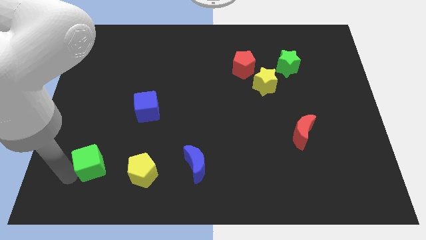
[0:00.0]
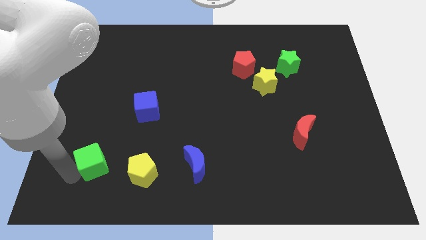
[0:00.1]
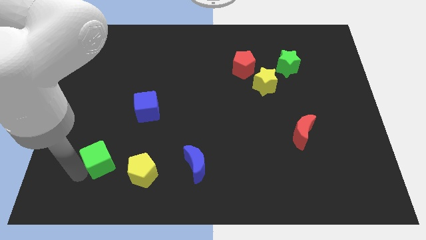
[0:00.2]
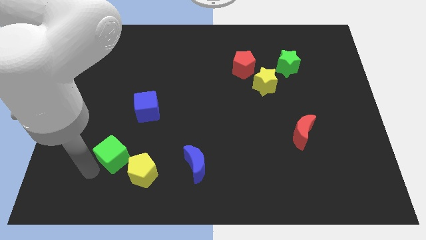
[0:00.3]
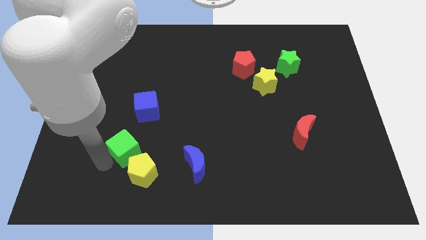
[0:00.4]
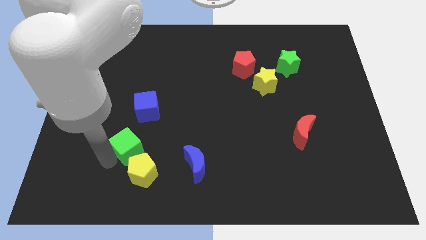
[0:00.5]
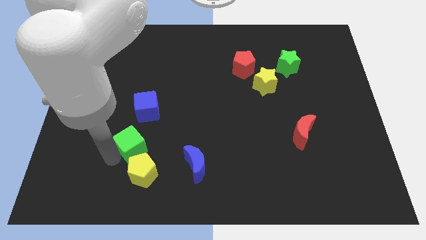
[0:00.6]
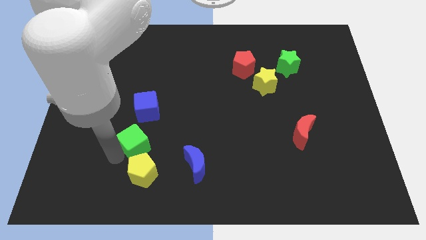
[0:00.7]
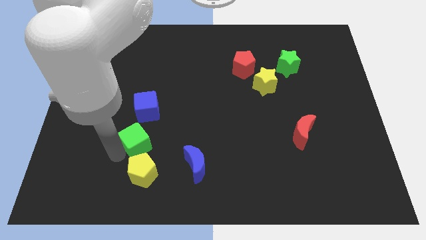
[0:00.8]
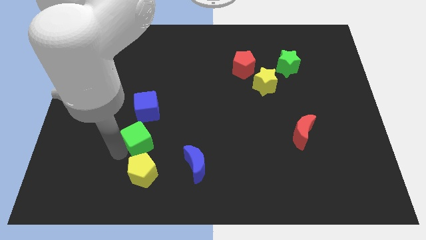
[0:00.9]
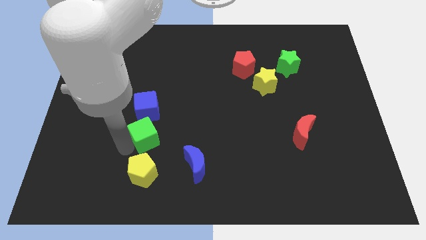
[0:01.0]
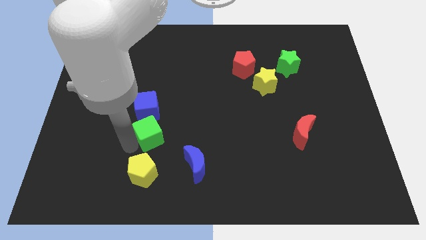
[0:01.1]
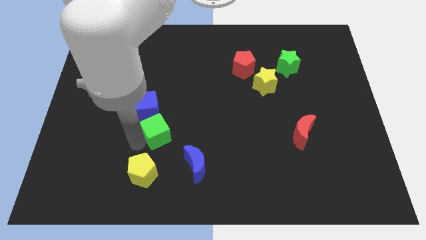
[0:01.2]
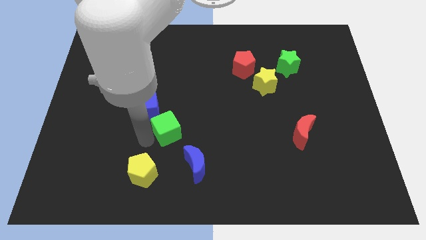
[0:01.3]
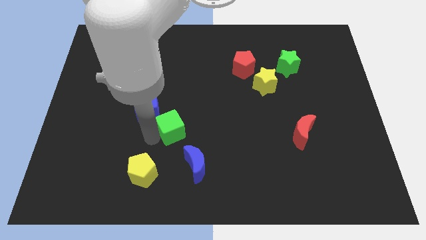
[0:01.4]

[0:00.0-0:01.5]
put the green cube close to the blue cube

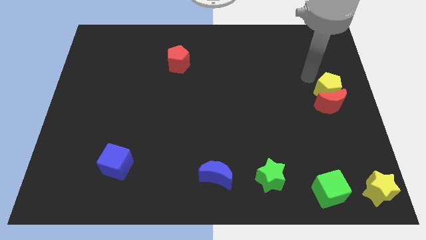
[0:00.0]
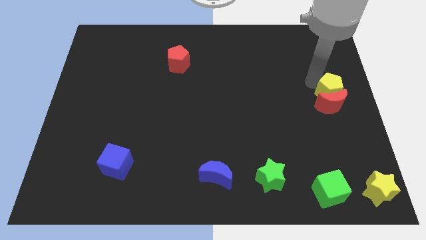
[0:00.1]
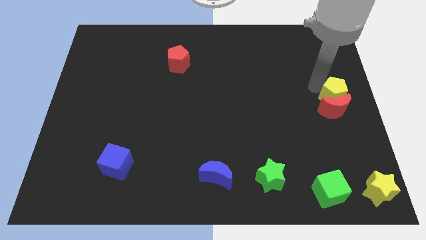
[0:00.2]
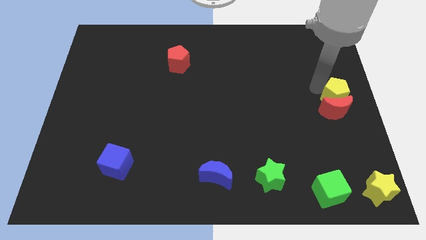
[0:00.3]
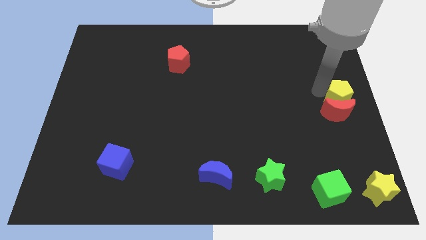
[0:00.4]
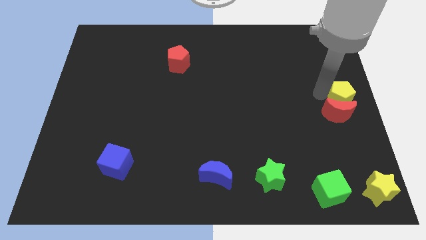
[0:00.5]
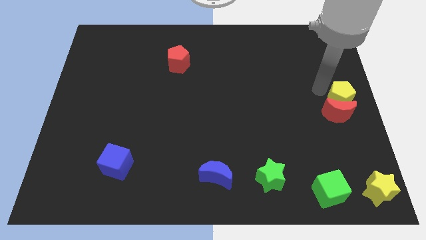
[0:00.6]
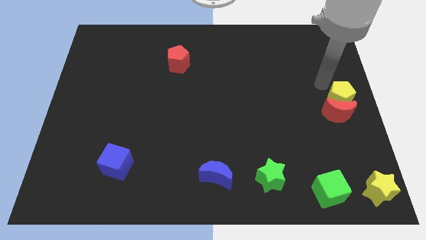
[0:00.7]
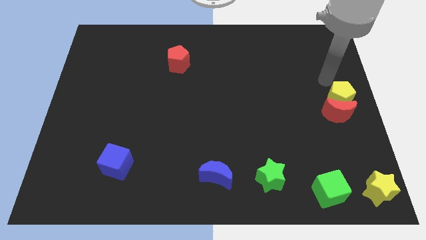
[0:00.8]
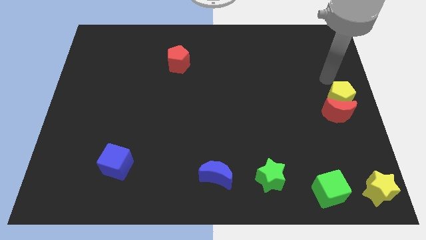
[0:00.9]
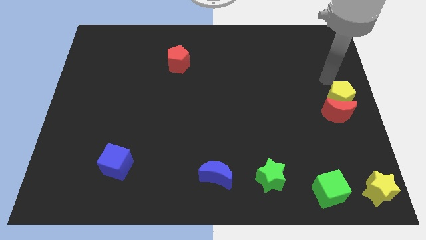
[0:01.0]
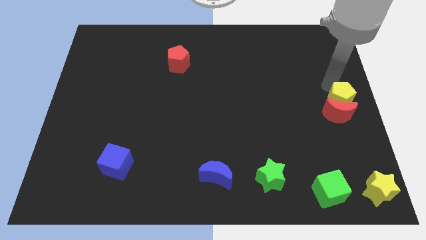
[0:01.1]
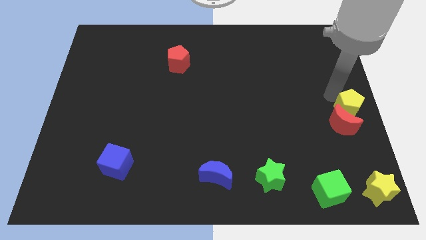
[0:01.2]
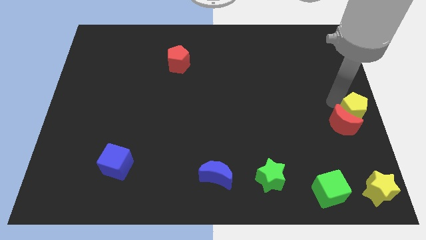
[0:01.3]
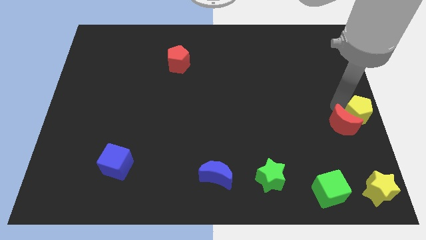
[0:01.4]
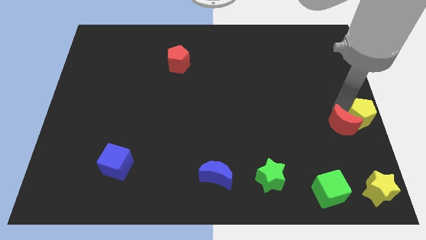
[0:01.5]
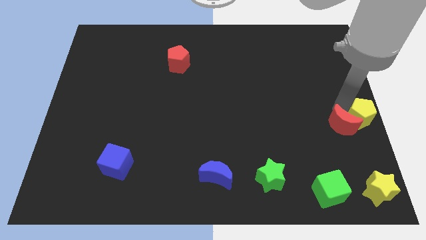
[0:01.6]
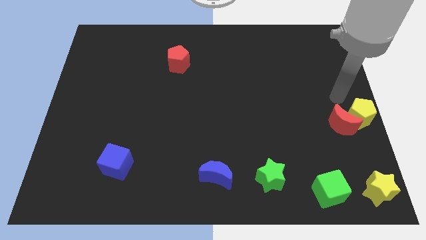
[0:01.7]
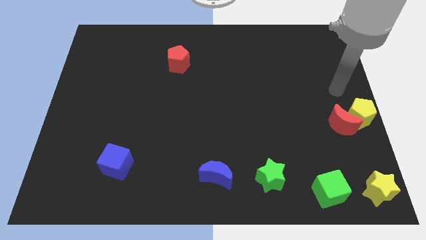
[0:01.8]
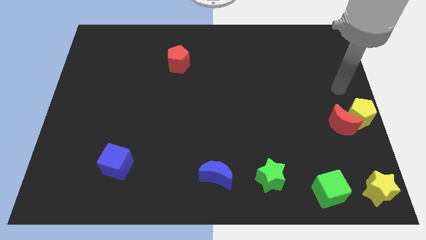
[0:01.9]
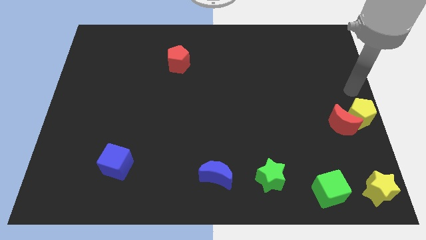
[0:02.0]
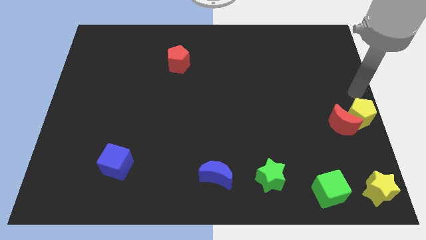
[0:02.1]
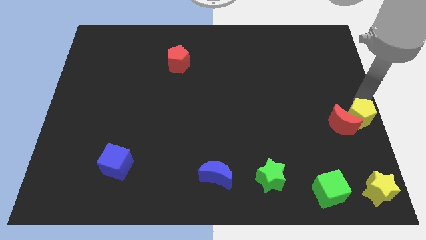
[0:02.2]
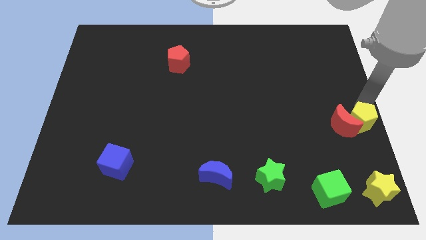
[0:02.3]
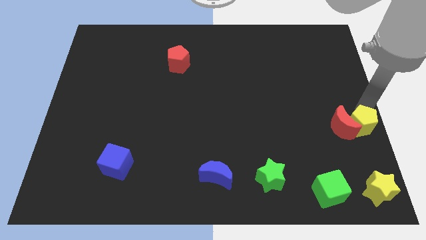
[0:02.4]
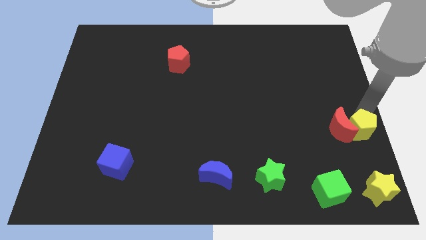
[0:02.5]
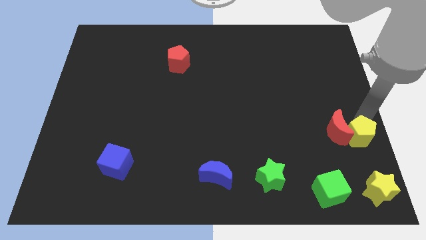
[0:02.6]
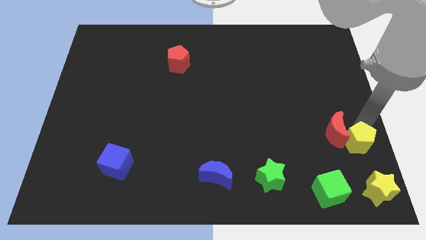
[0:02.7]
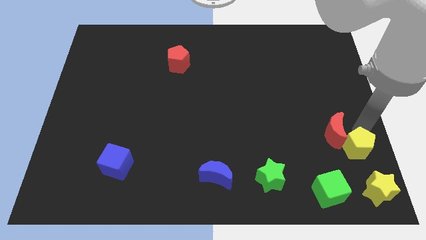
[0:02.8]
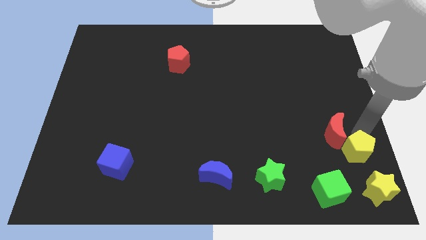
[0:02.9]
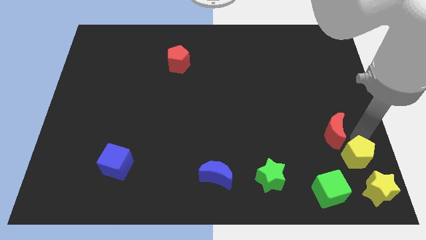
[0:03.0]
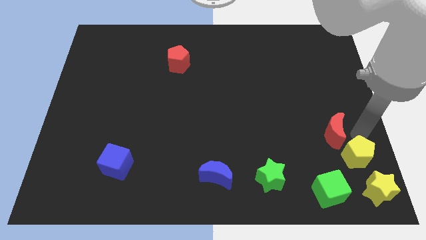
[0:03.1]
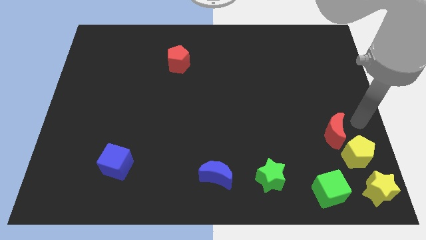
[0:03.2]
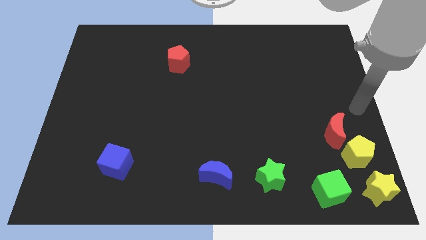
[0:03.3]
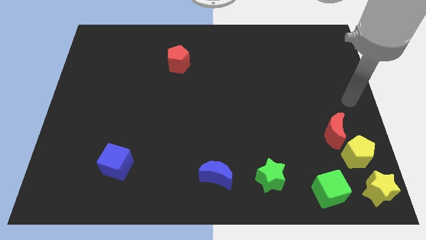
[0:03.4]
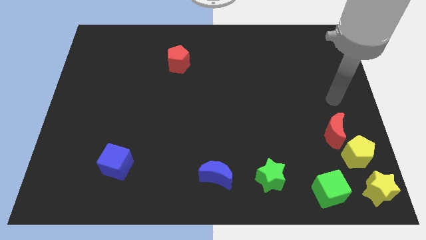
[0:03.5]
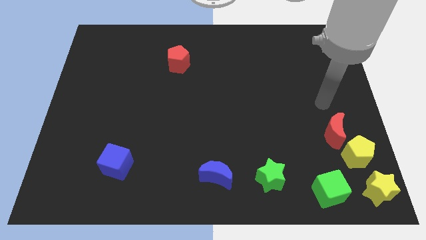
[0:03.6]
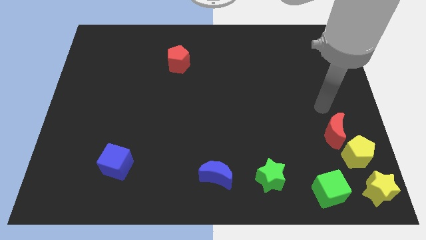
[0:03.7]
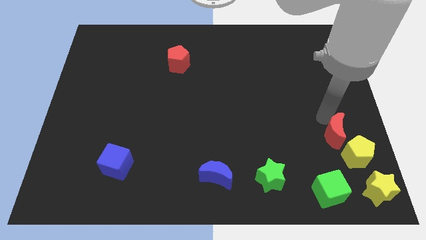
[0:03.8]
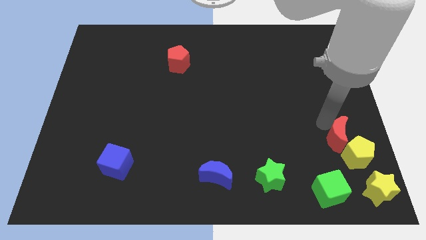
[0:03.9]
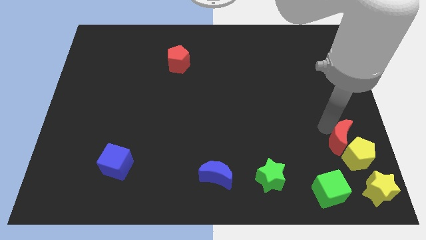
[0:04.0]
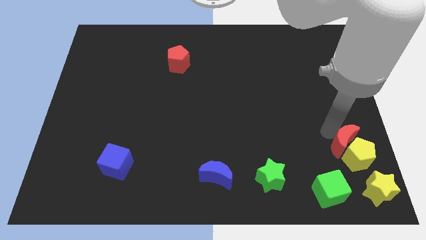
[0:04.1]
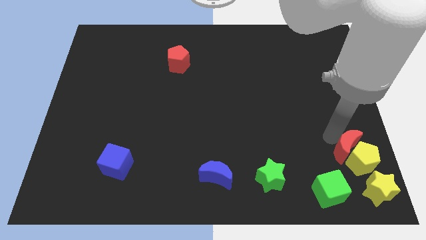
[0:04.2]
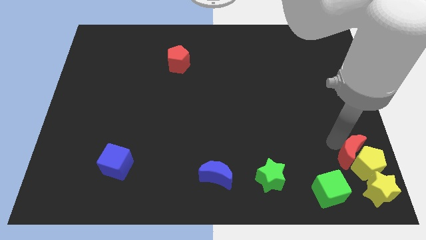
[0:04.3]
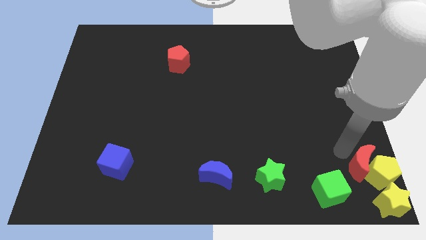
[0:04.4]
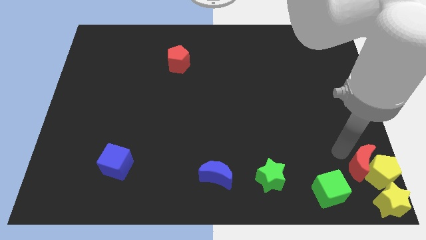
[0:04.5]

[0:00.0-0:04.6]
push the yellow pentagon and red moon into the top side of the yellow star

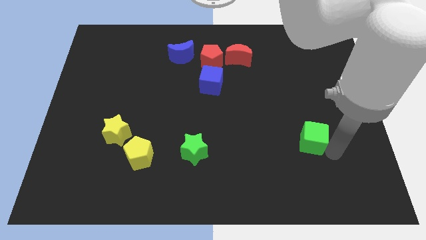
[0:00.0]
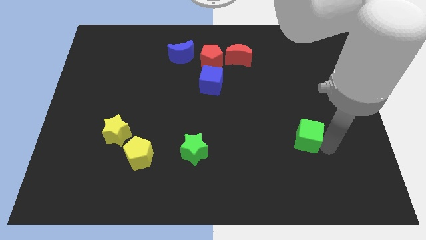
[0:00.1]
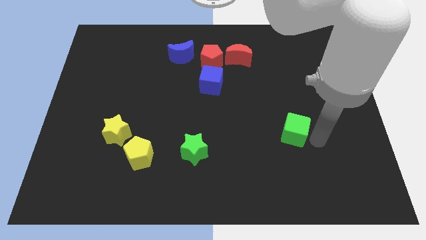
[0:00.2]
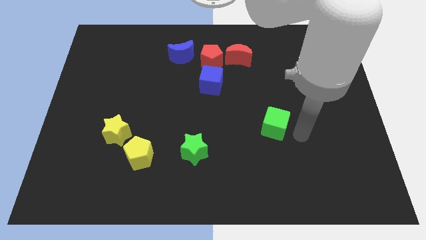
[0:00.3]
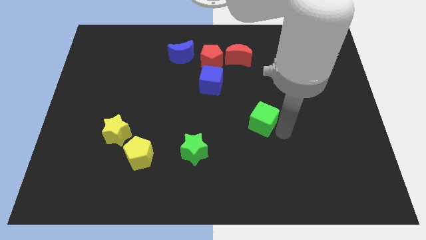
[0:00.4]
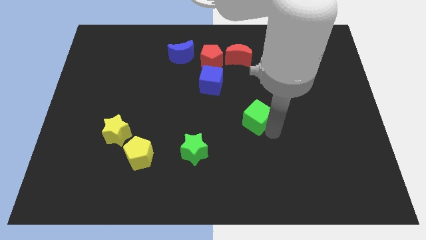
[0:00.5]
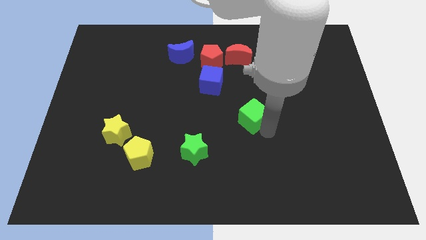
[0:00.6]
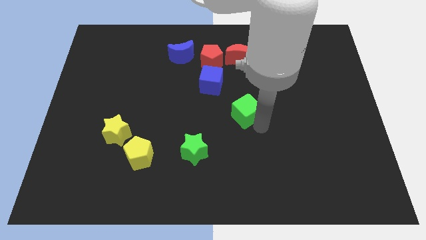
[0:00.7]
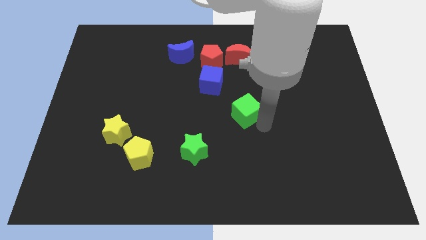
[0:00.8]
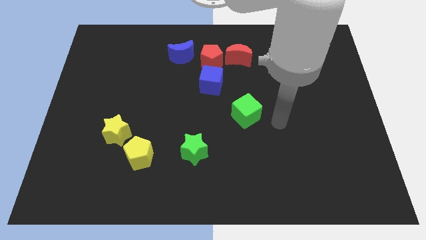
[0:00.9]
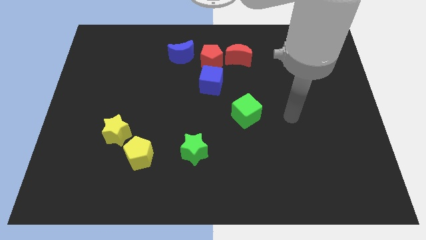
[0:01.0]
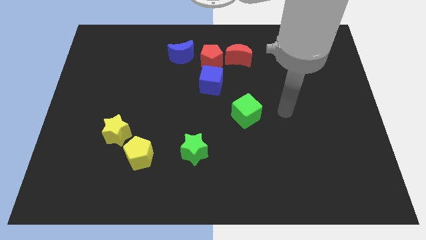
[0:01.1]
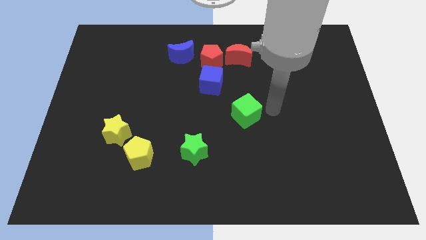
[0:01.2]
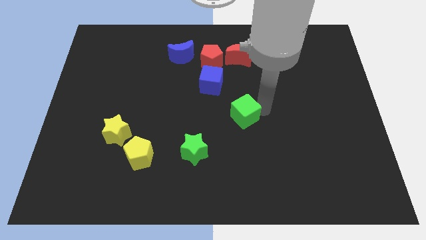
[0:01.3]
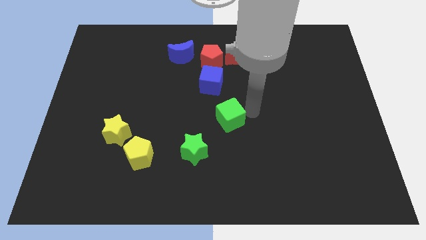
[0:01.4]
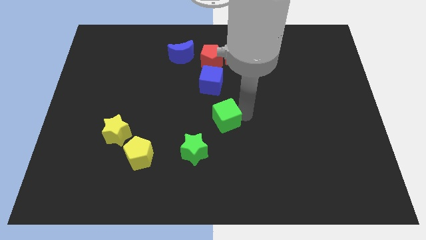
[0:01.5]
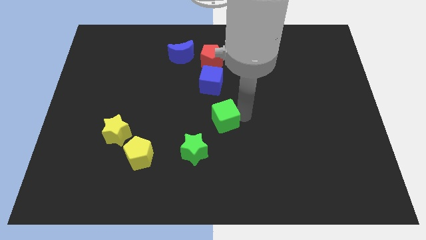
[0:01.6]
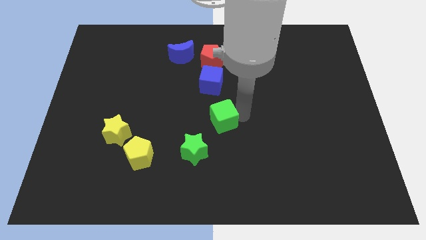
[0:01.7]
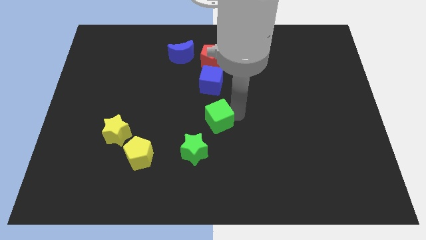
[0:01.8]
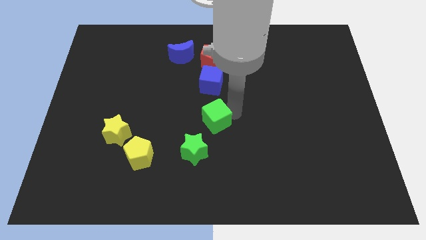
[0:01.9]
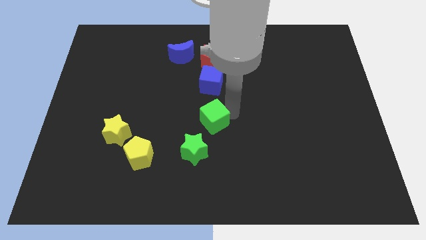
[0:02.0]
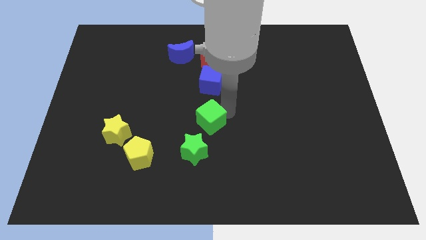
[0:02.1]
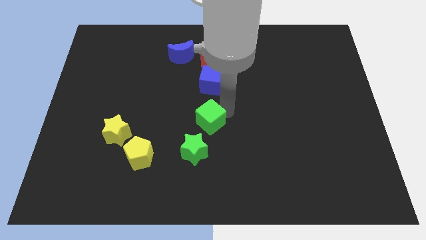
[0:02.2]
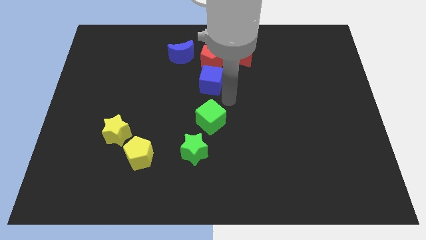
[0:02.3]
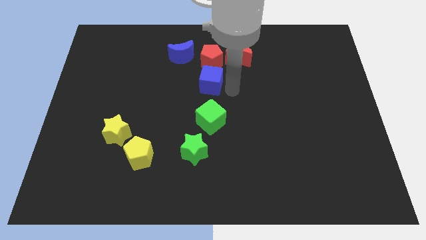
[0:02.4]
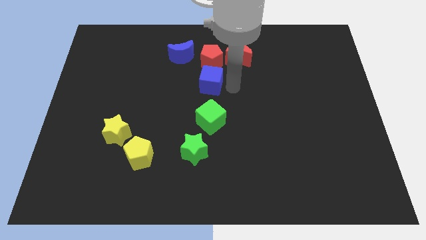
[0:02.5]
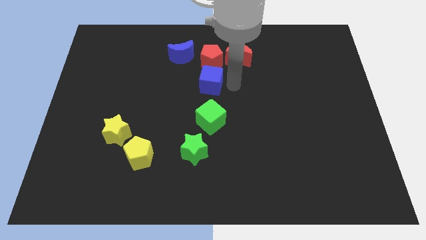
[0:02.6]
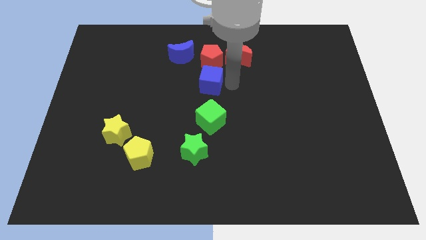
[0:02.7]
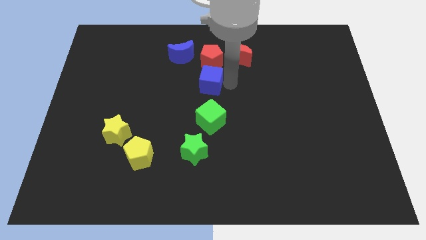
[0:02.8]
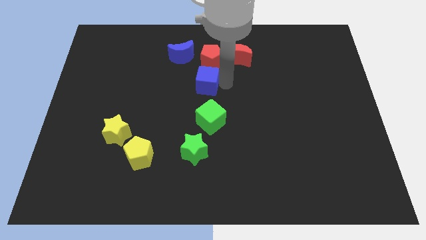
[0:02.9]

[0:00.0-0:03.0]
place the green cube down to the blue cube
